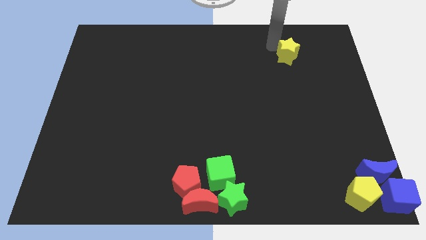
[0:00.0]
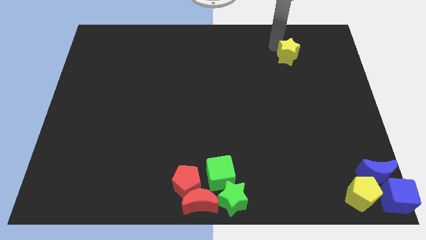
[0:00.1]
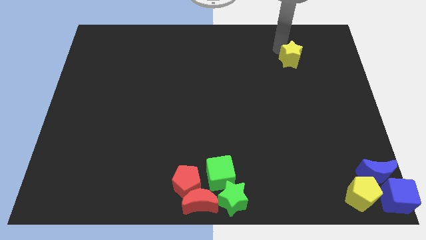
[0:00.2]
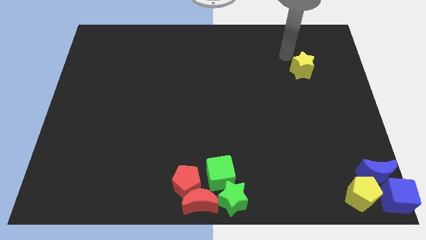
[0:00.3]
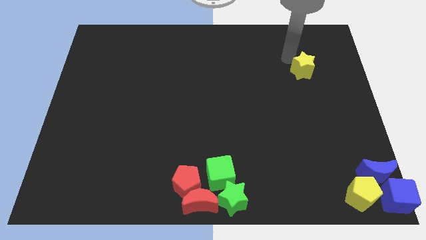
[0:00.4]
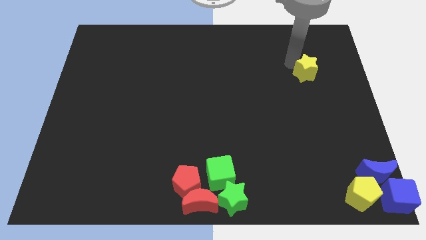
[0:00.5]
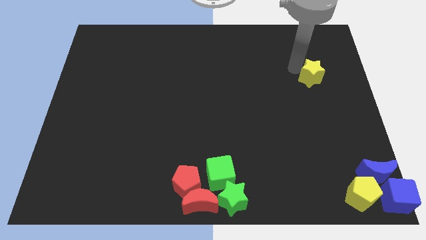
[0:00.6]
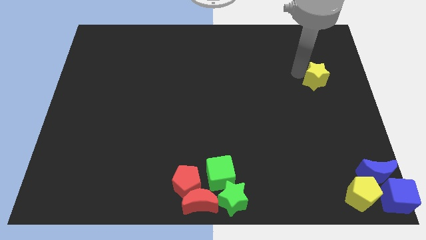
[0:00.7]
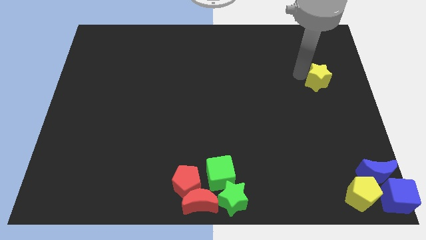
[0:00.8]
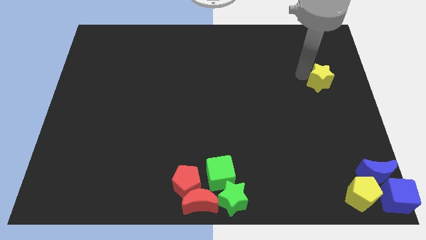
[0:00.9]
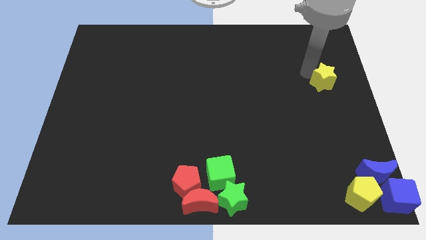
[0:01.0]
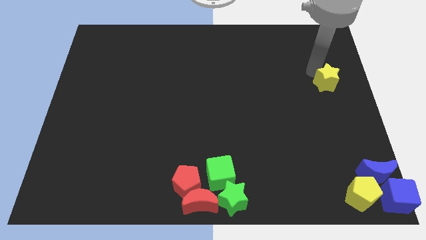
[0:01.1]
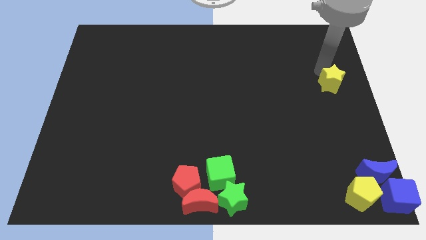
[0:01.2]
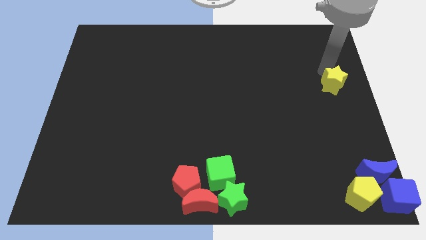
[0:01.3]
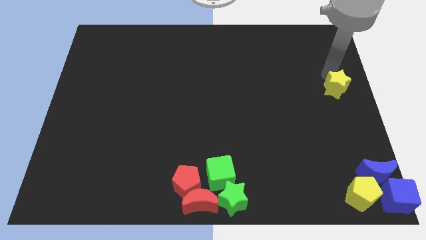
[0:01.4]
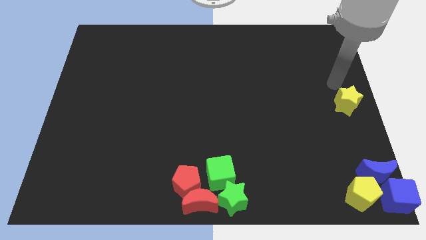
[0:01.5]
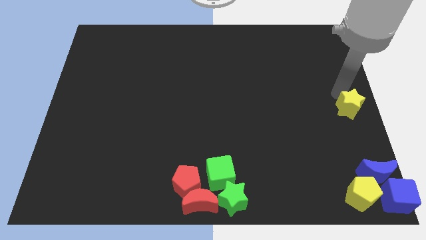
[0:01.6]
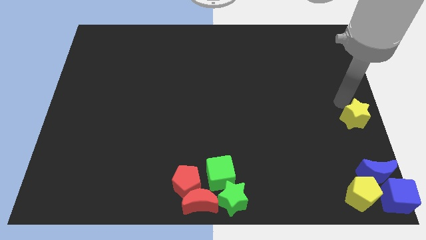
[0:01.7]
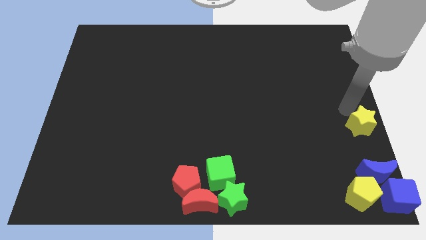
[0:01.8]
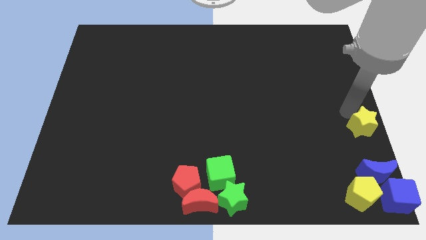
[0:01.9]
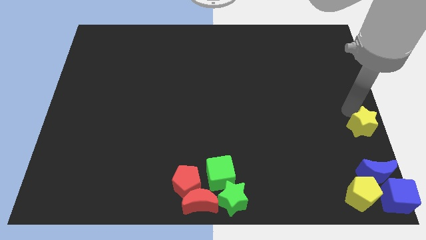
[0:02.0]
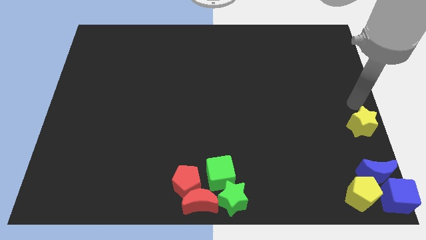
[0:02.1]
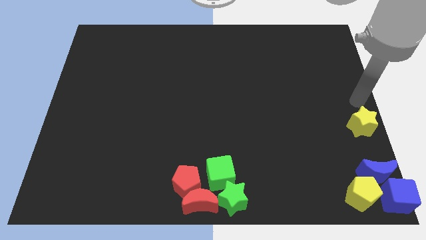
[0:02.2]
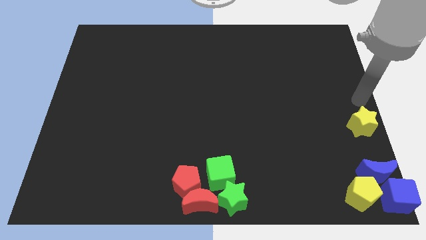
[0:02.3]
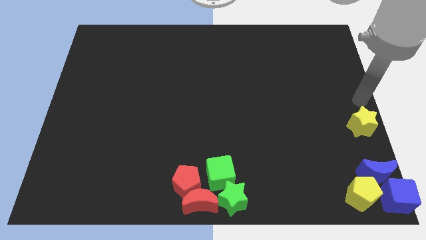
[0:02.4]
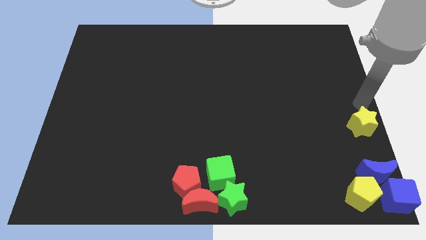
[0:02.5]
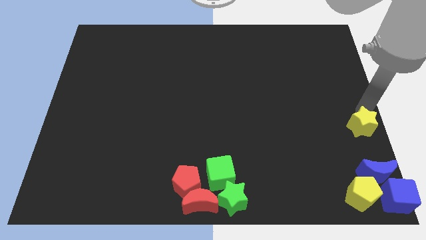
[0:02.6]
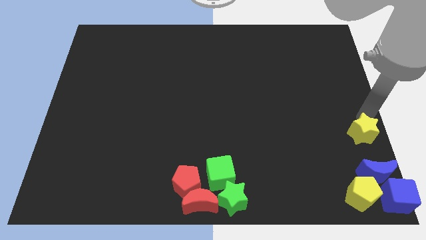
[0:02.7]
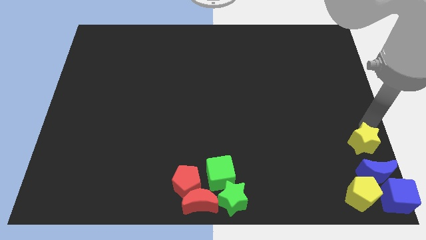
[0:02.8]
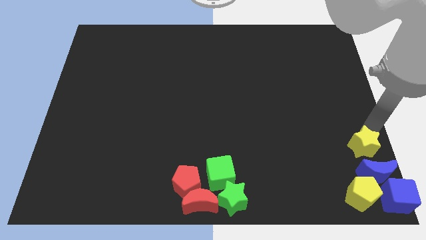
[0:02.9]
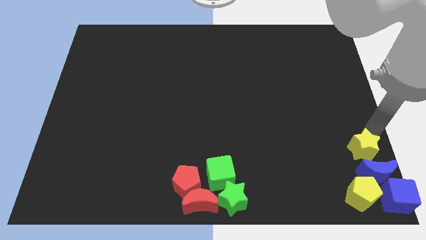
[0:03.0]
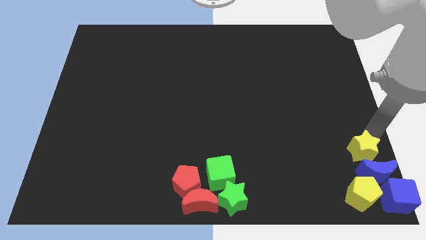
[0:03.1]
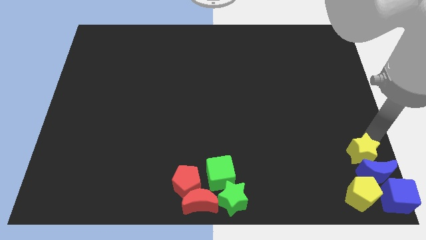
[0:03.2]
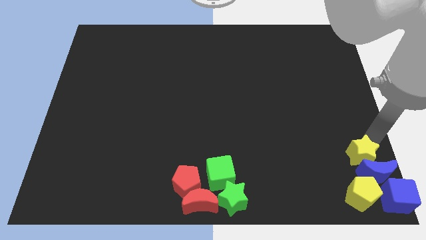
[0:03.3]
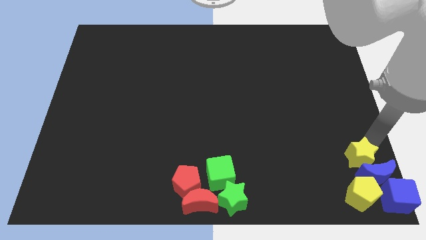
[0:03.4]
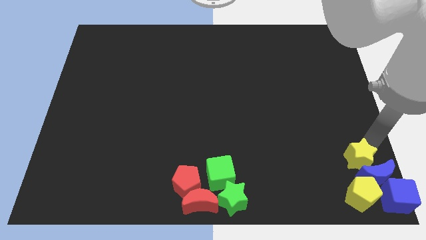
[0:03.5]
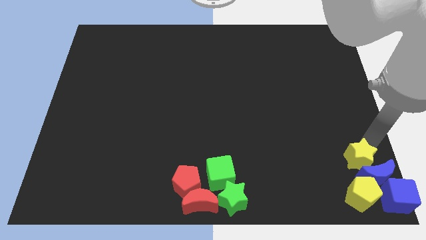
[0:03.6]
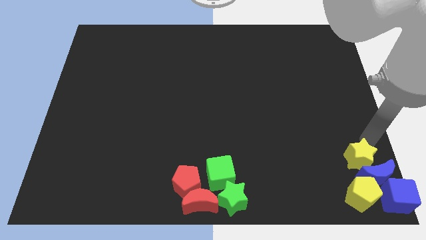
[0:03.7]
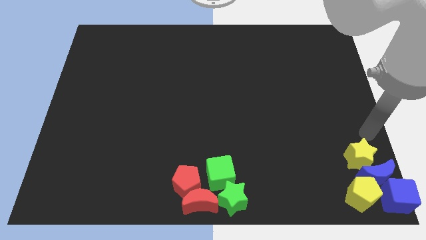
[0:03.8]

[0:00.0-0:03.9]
push the yellow star into the blue half moon

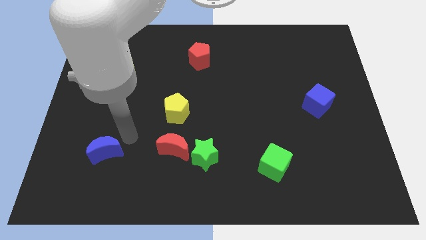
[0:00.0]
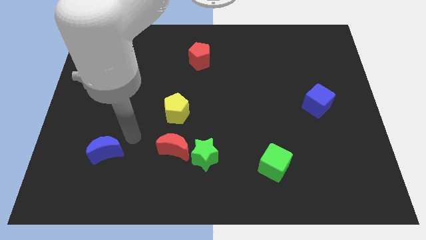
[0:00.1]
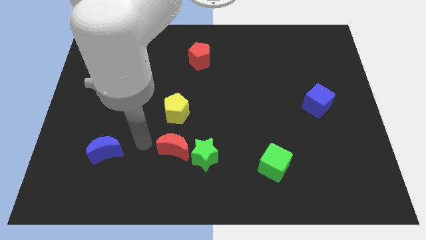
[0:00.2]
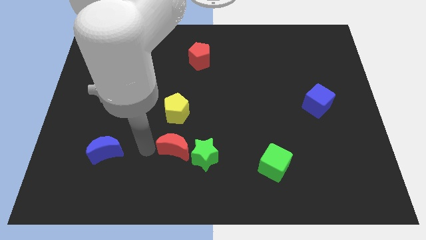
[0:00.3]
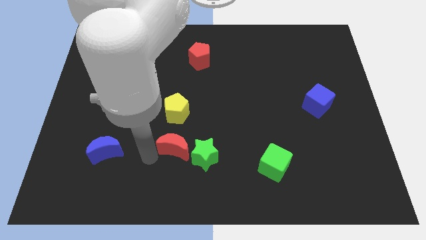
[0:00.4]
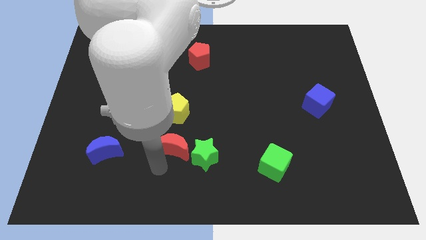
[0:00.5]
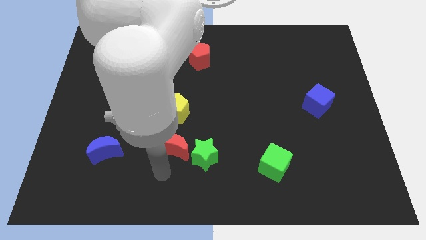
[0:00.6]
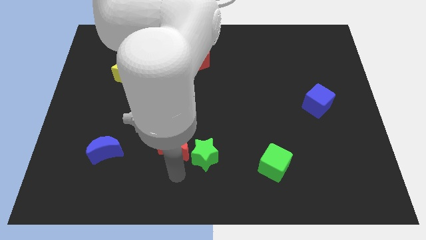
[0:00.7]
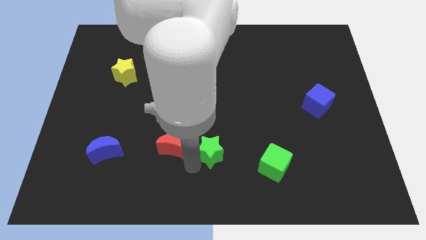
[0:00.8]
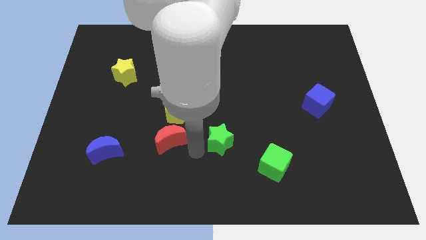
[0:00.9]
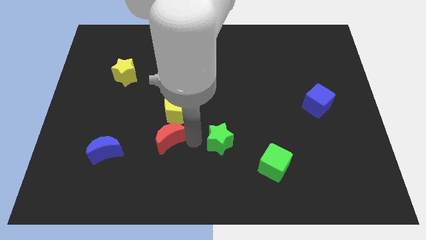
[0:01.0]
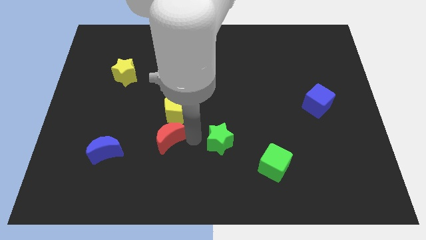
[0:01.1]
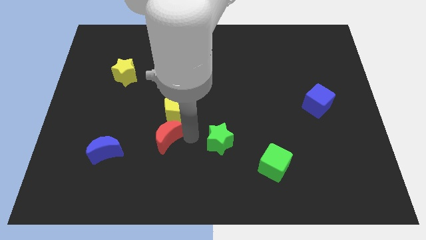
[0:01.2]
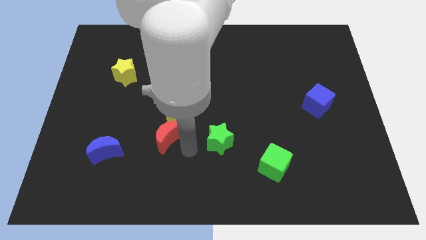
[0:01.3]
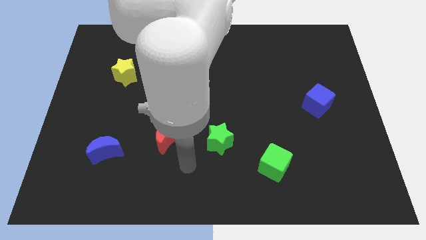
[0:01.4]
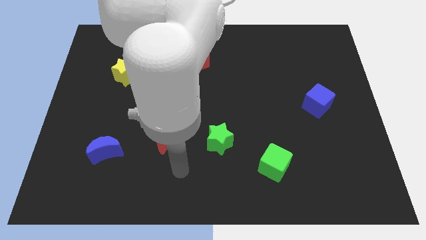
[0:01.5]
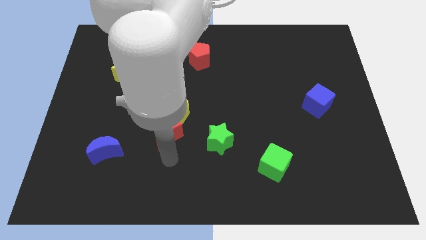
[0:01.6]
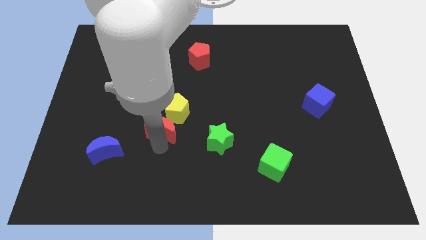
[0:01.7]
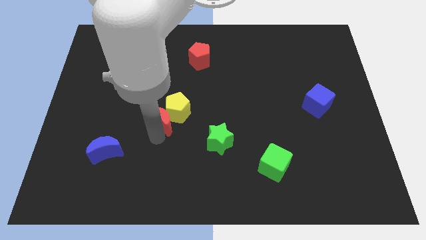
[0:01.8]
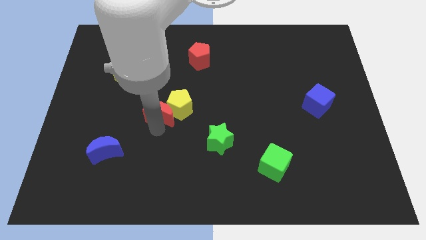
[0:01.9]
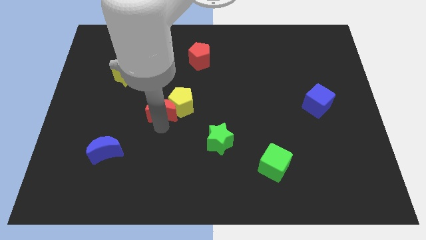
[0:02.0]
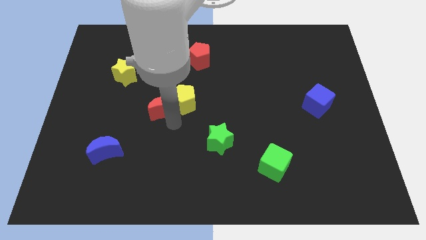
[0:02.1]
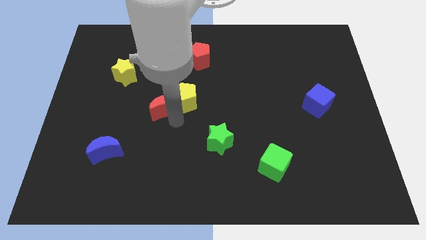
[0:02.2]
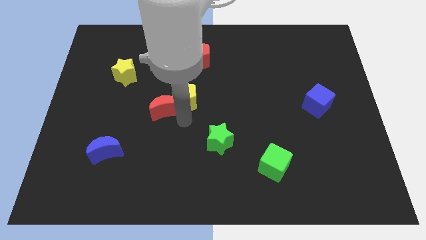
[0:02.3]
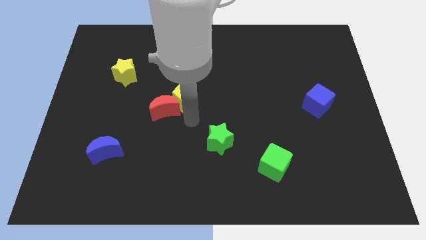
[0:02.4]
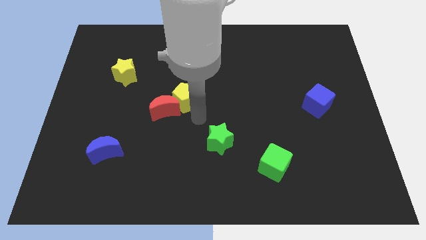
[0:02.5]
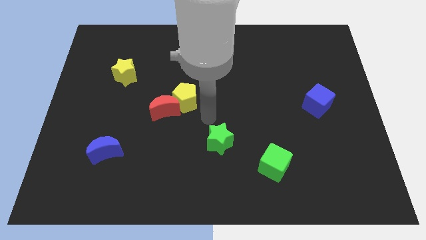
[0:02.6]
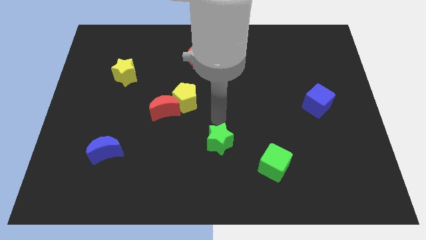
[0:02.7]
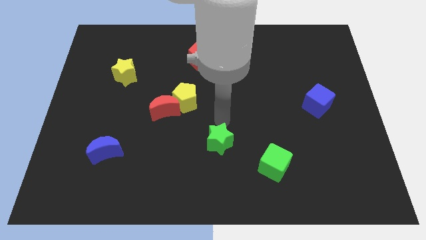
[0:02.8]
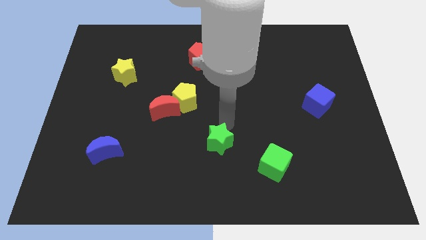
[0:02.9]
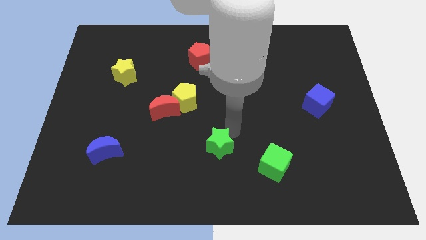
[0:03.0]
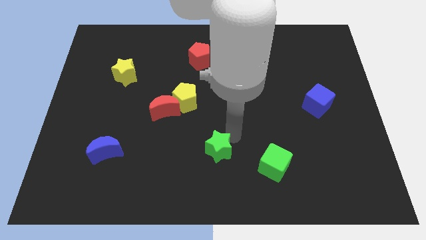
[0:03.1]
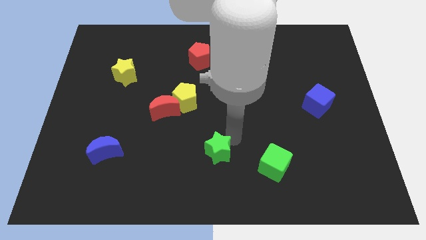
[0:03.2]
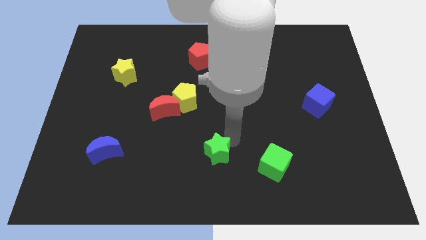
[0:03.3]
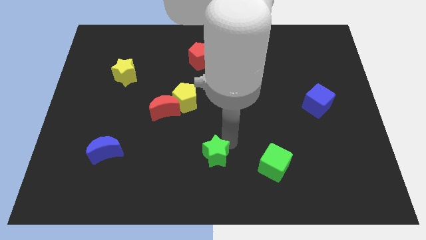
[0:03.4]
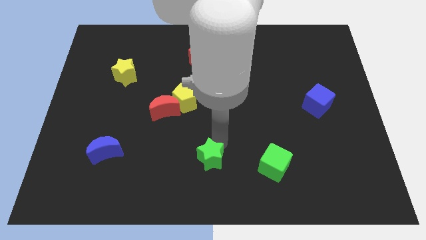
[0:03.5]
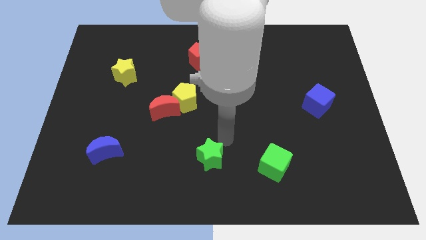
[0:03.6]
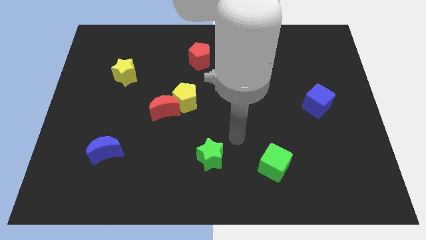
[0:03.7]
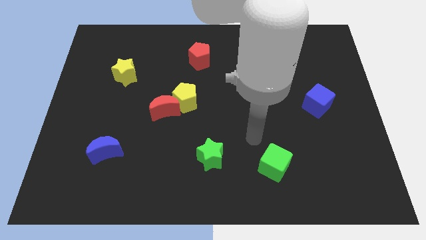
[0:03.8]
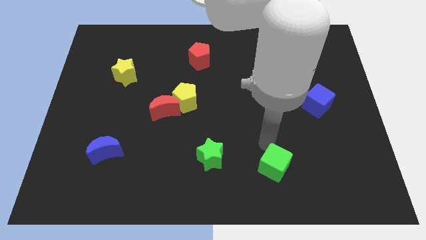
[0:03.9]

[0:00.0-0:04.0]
push the red crescent into the yellow pentagon towards the center of the board

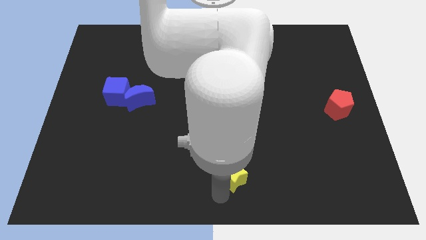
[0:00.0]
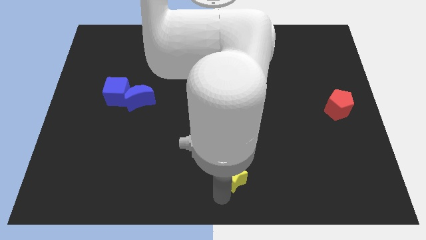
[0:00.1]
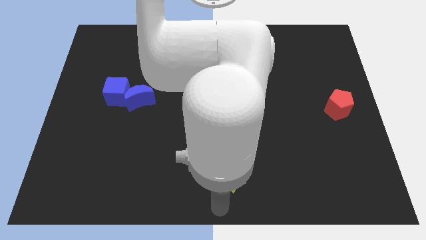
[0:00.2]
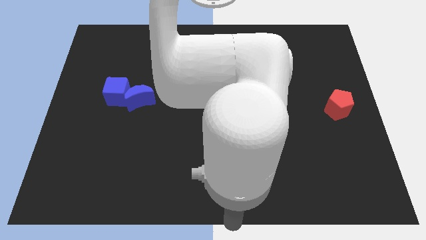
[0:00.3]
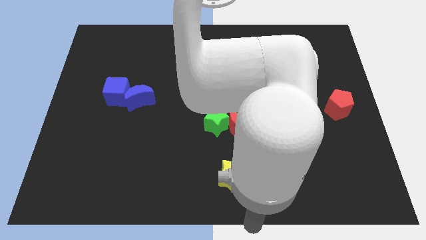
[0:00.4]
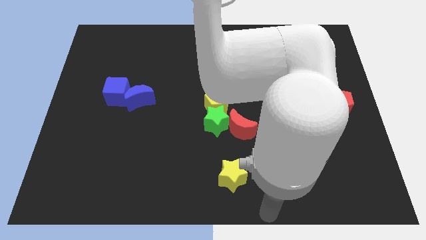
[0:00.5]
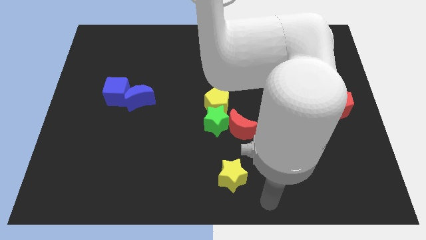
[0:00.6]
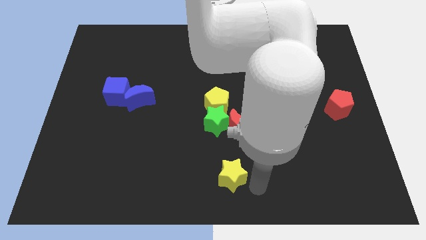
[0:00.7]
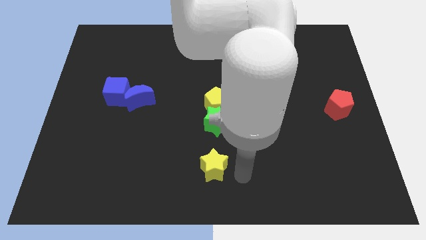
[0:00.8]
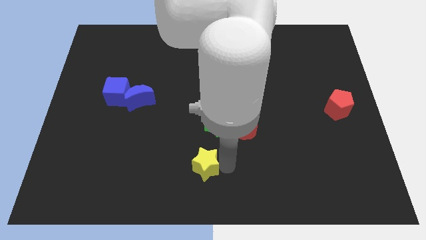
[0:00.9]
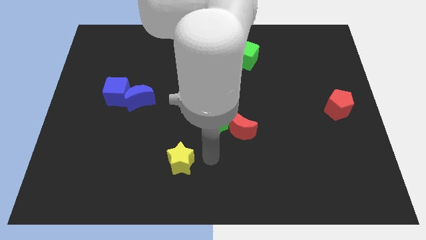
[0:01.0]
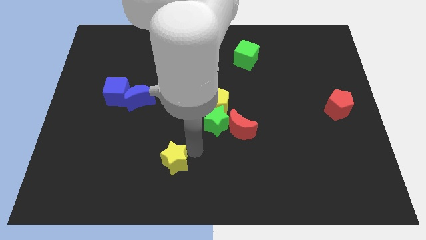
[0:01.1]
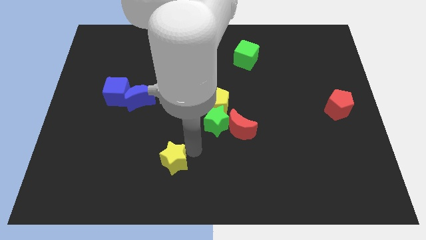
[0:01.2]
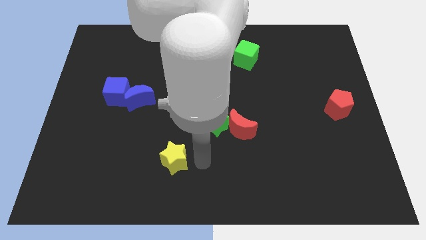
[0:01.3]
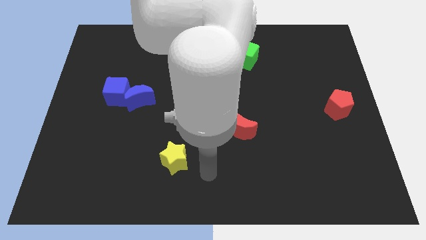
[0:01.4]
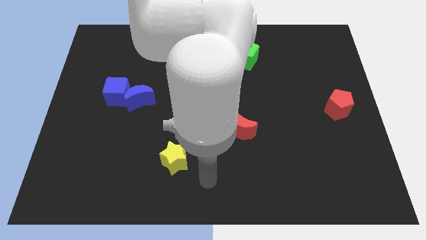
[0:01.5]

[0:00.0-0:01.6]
slide yellow star vertical bottom left to the green star
